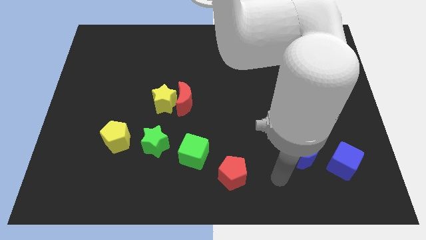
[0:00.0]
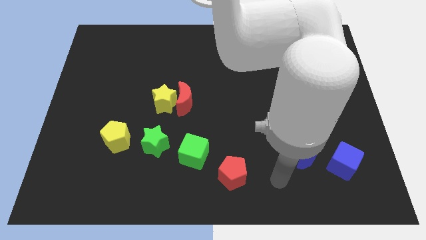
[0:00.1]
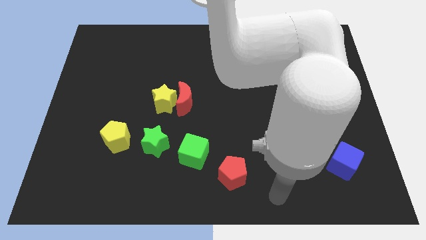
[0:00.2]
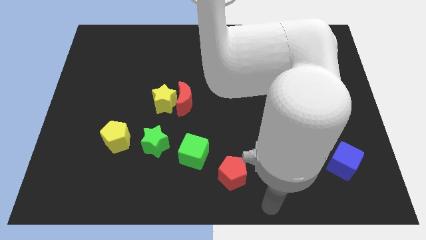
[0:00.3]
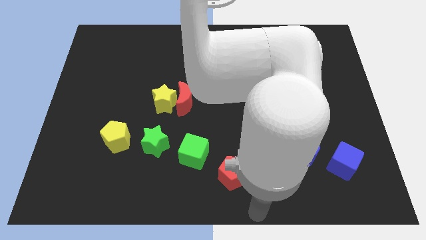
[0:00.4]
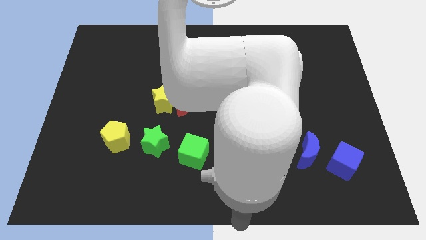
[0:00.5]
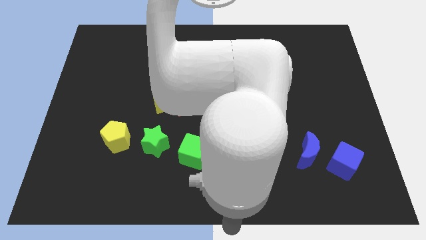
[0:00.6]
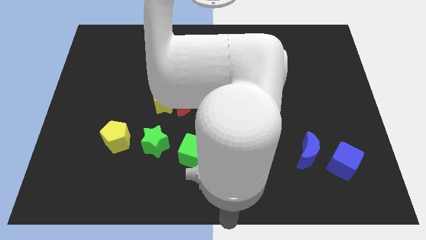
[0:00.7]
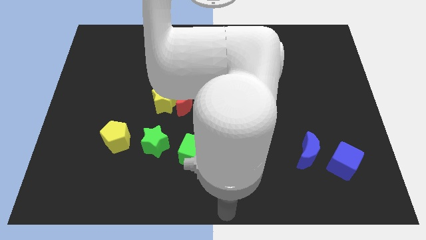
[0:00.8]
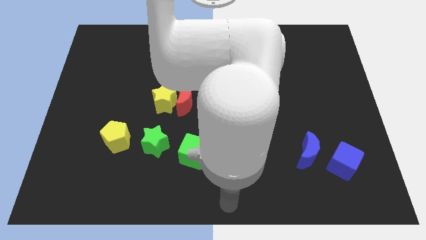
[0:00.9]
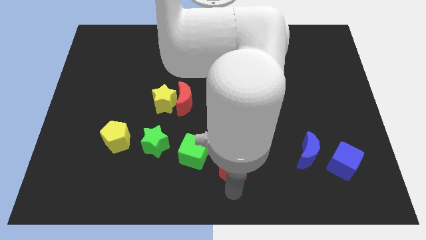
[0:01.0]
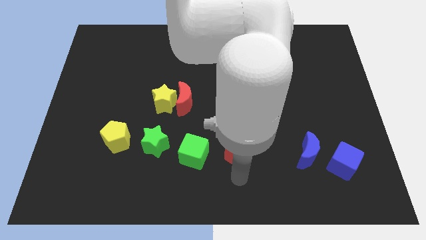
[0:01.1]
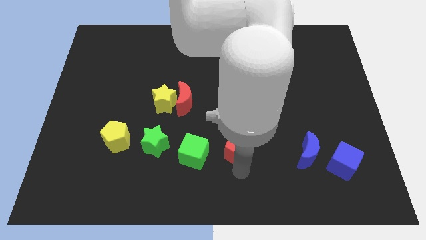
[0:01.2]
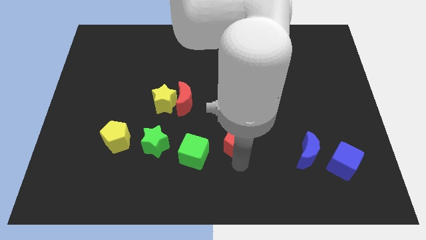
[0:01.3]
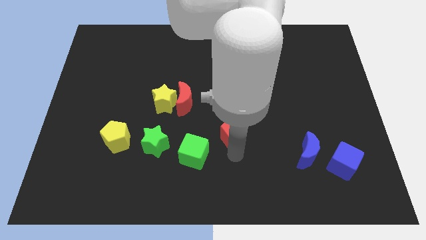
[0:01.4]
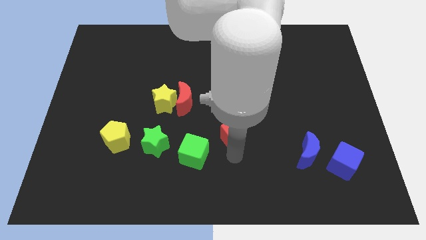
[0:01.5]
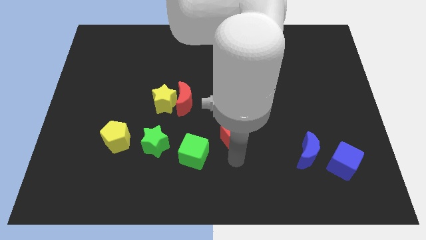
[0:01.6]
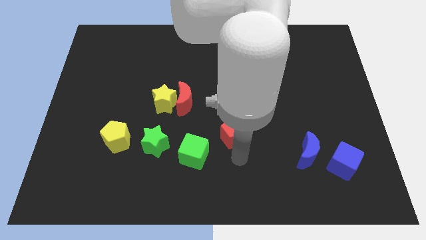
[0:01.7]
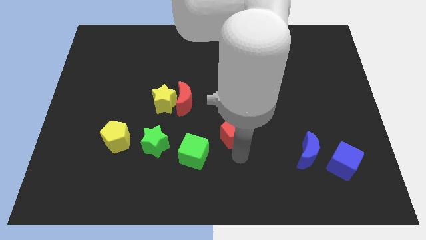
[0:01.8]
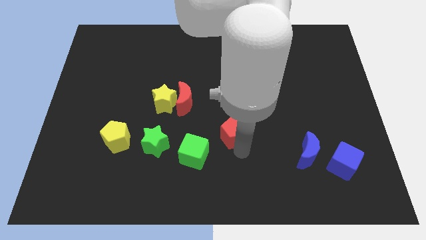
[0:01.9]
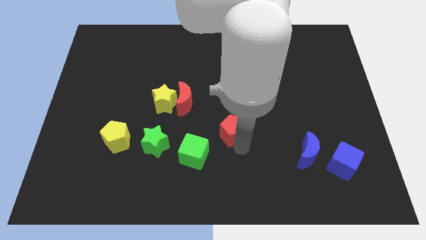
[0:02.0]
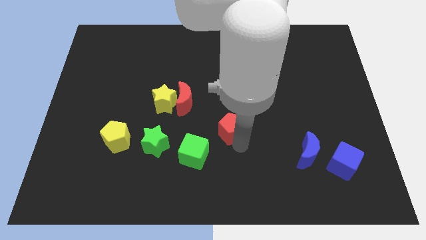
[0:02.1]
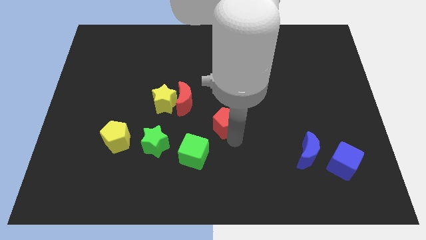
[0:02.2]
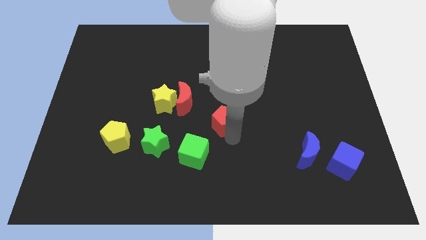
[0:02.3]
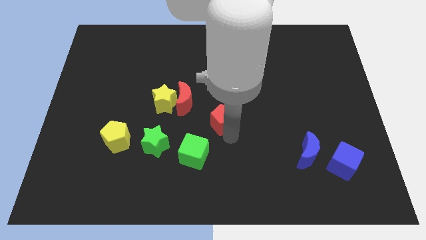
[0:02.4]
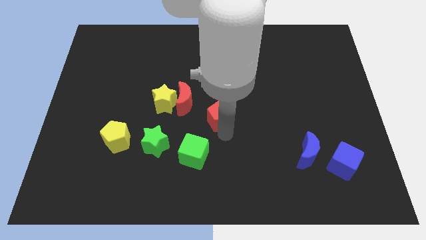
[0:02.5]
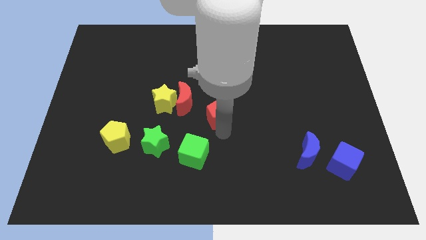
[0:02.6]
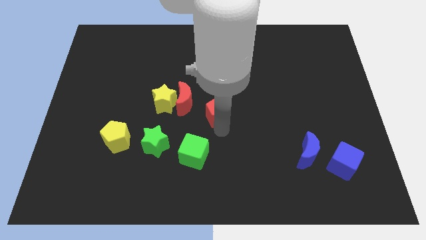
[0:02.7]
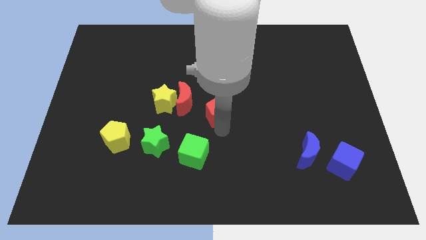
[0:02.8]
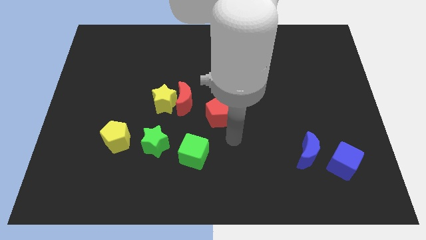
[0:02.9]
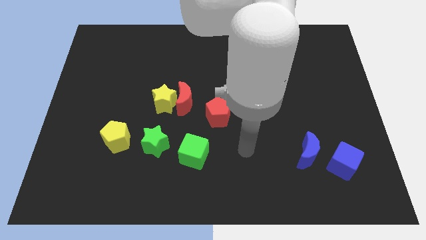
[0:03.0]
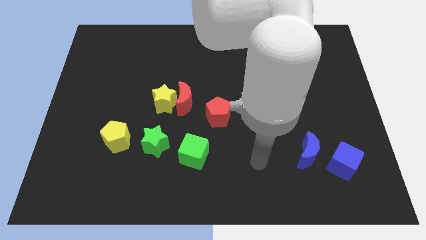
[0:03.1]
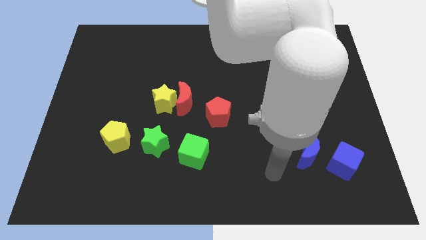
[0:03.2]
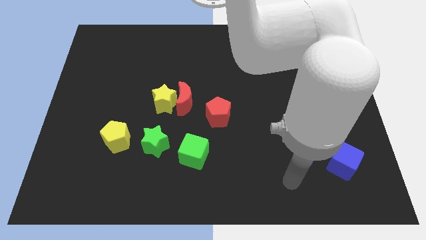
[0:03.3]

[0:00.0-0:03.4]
move the red pentagon bottom right to the red crescent

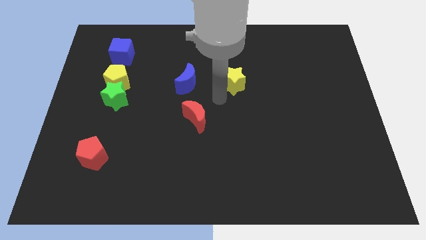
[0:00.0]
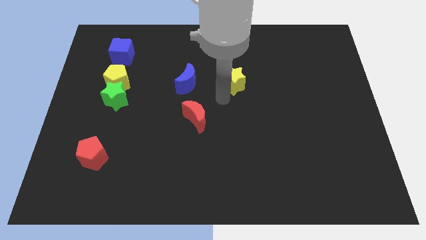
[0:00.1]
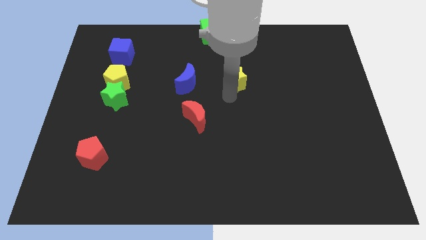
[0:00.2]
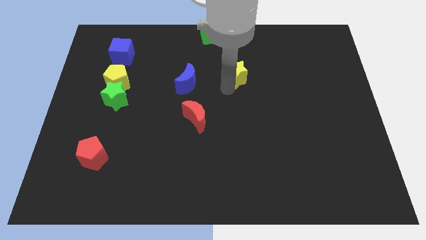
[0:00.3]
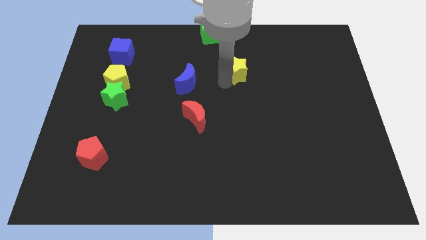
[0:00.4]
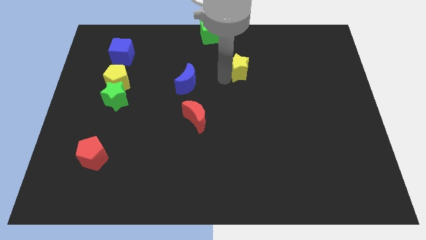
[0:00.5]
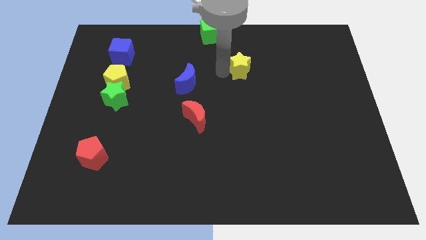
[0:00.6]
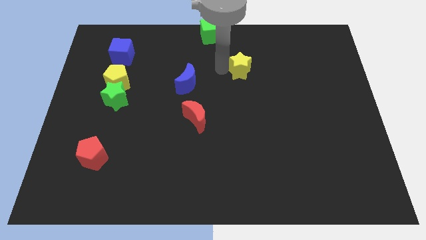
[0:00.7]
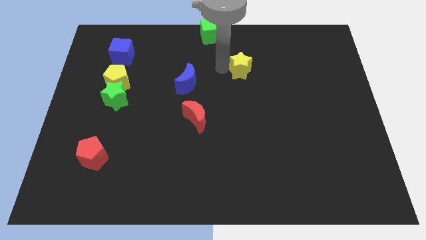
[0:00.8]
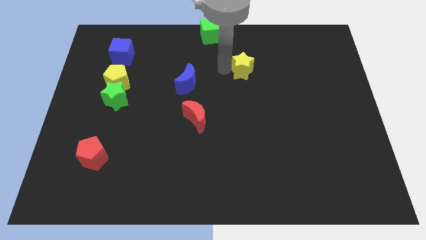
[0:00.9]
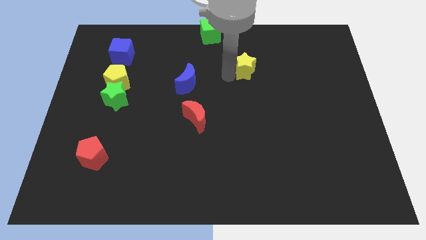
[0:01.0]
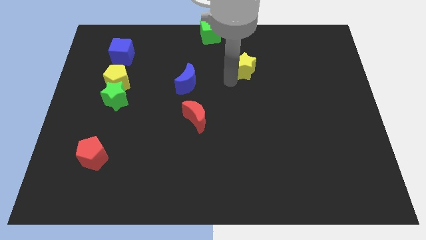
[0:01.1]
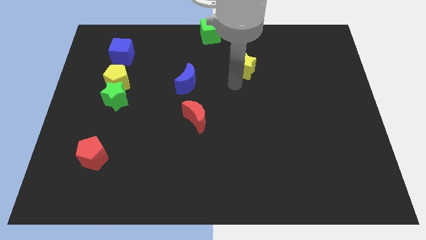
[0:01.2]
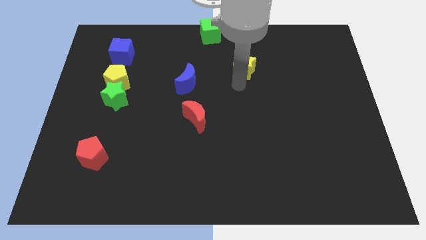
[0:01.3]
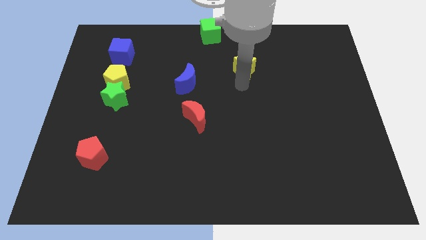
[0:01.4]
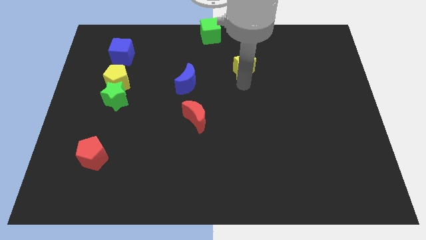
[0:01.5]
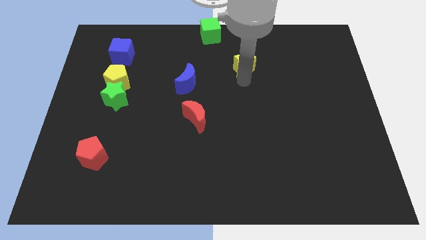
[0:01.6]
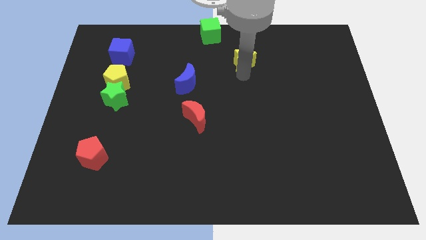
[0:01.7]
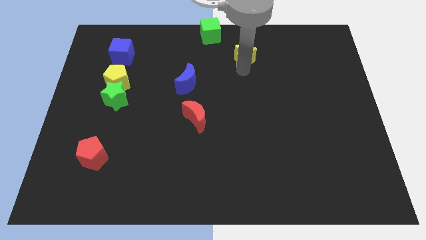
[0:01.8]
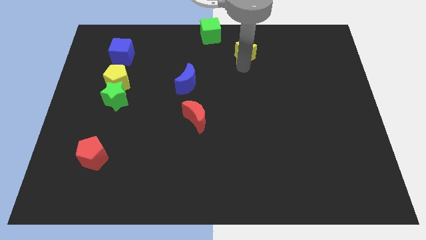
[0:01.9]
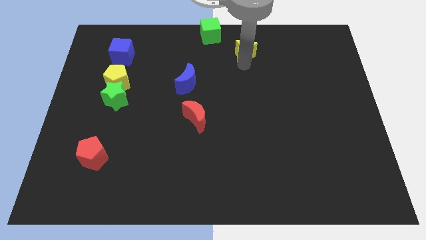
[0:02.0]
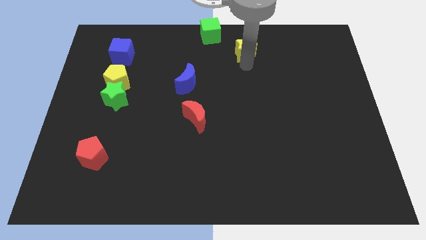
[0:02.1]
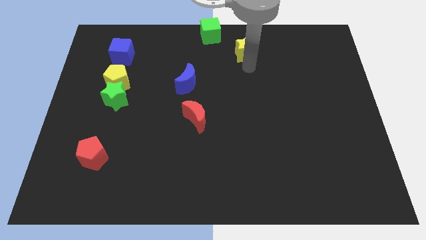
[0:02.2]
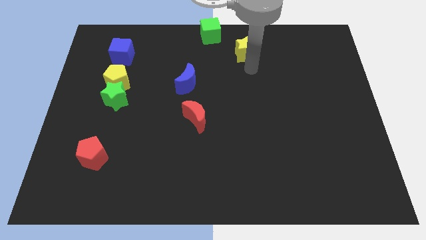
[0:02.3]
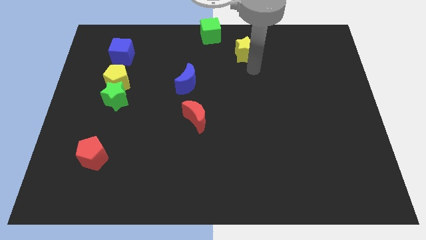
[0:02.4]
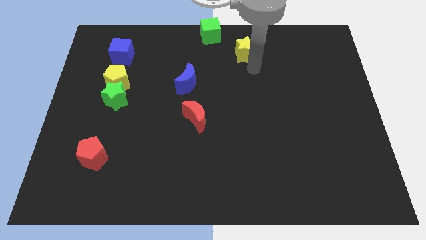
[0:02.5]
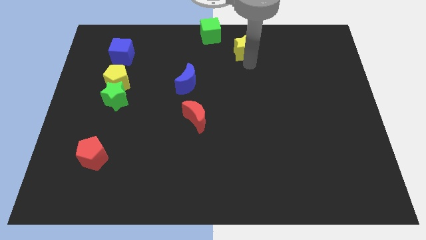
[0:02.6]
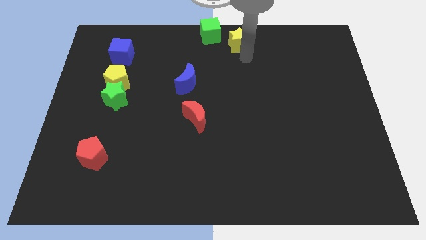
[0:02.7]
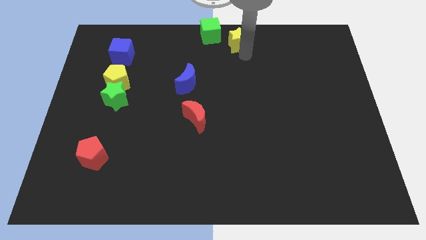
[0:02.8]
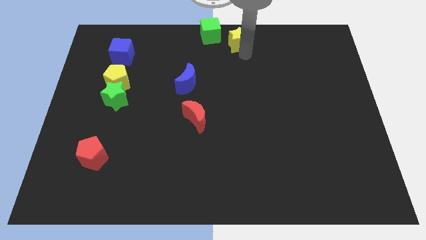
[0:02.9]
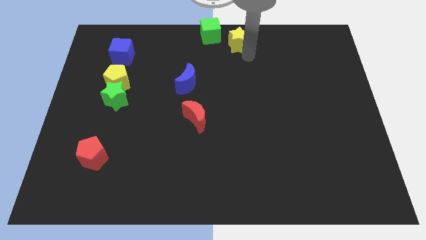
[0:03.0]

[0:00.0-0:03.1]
move the yellow star towards the right side of the green cube

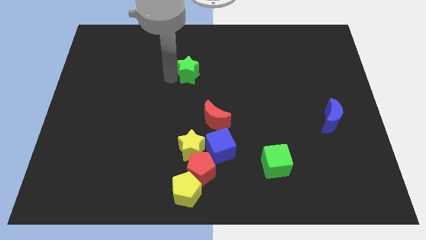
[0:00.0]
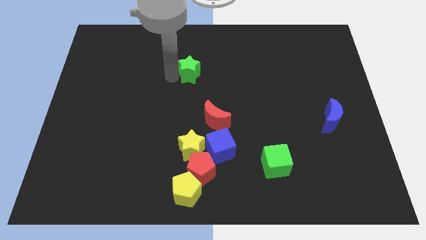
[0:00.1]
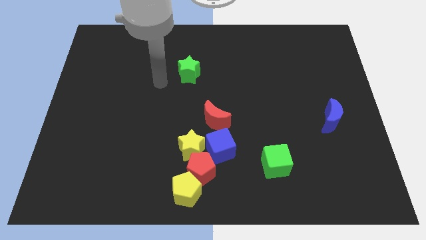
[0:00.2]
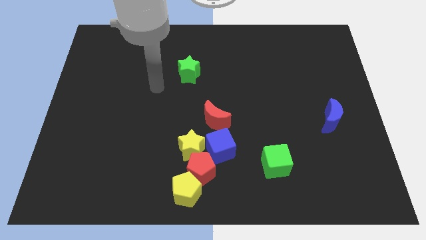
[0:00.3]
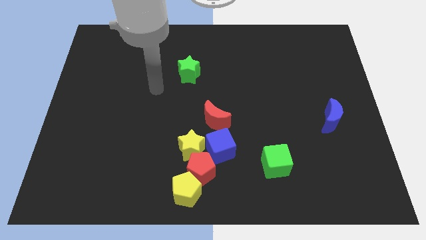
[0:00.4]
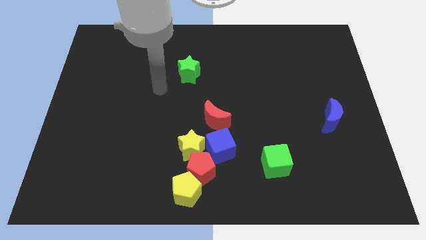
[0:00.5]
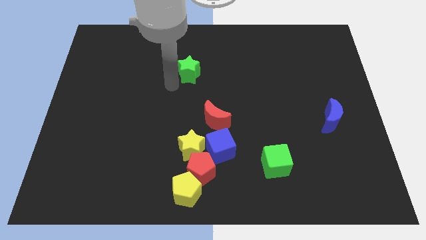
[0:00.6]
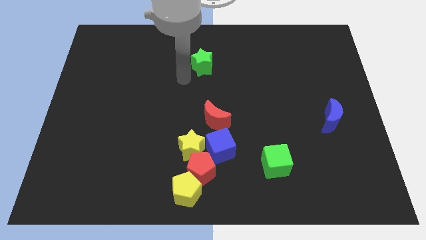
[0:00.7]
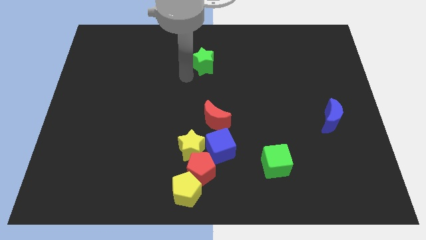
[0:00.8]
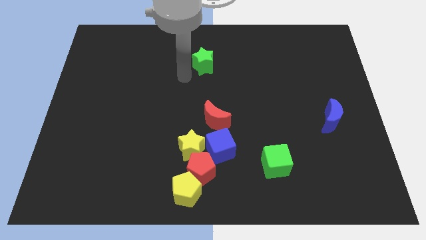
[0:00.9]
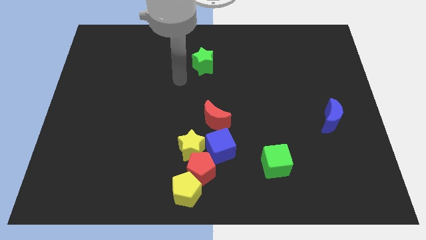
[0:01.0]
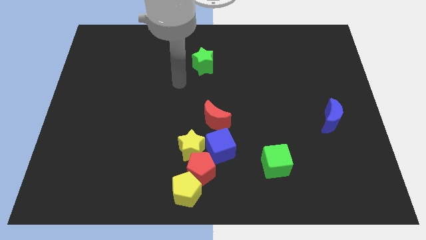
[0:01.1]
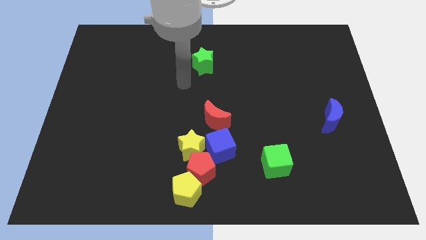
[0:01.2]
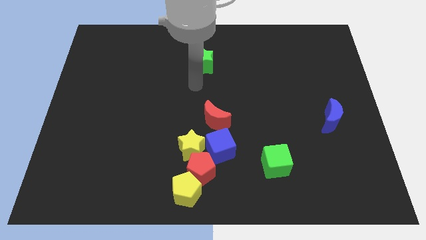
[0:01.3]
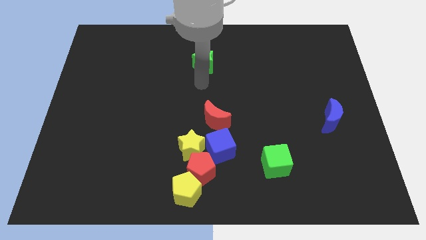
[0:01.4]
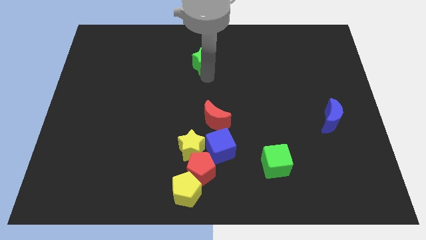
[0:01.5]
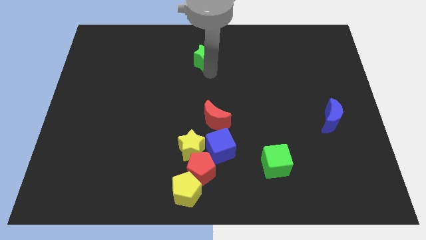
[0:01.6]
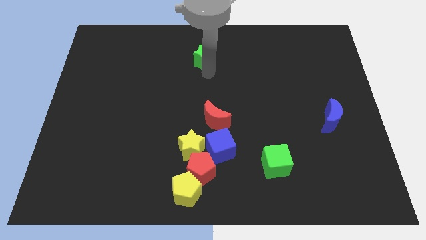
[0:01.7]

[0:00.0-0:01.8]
push the green star upwards

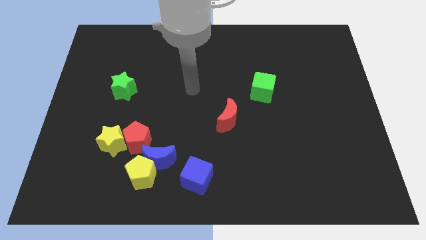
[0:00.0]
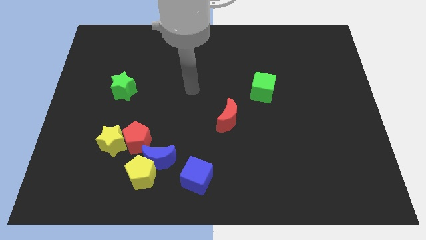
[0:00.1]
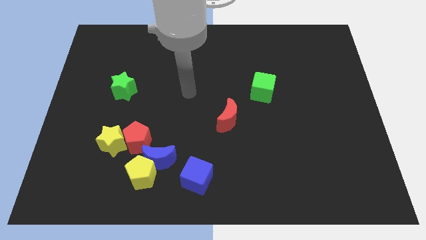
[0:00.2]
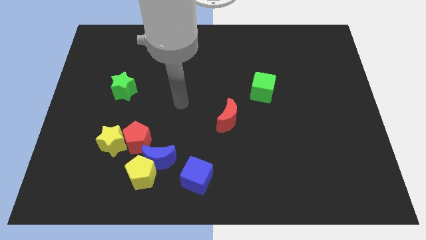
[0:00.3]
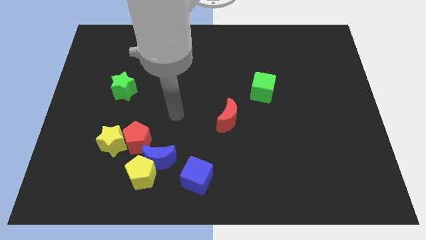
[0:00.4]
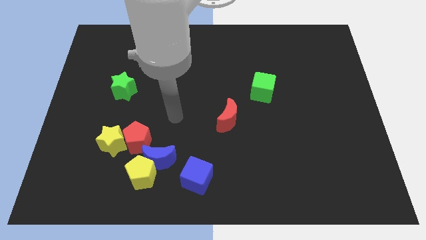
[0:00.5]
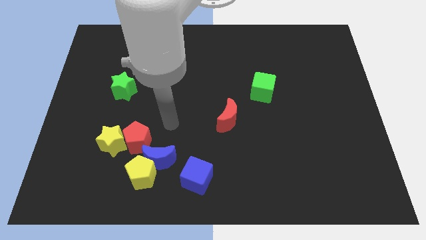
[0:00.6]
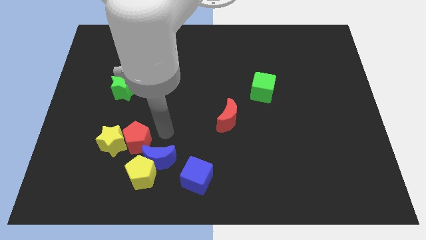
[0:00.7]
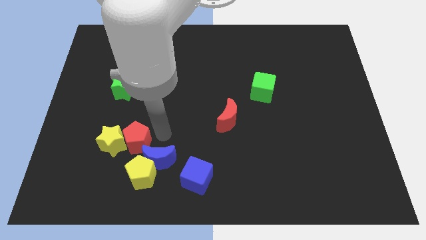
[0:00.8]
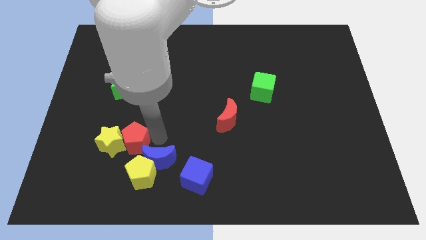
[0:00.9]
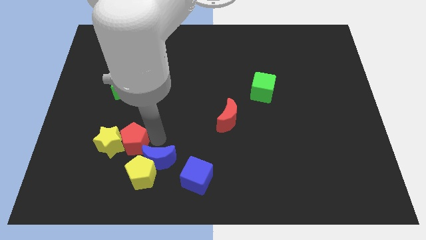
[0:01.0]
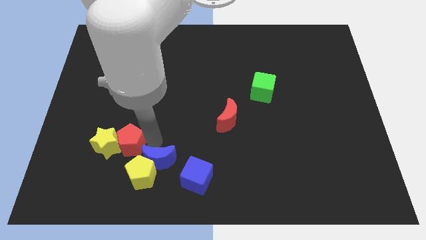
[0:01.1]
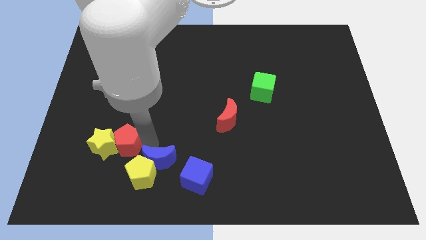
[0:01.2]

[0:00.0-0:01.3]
push the red pentagon slightly to the left
